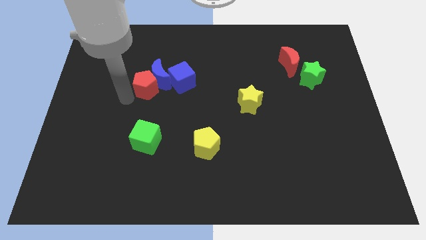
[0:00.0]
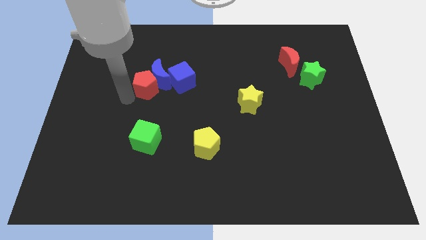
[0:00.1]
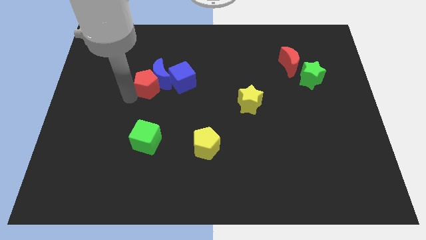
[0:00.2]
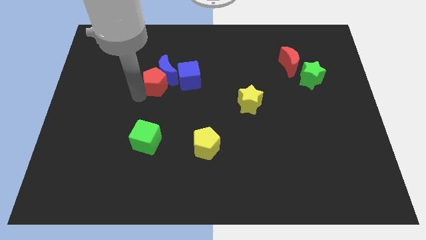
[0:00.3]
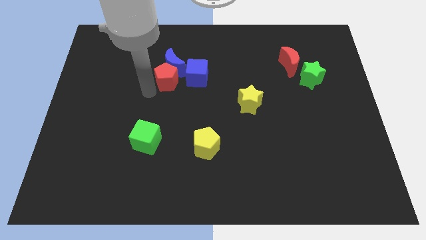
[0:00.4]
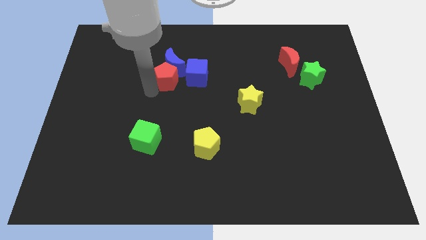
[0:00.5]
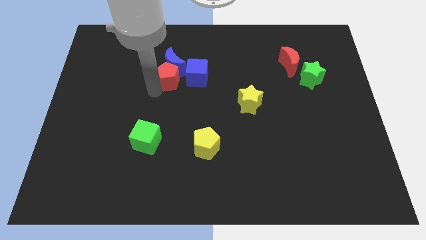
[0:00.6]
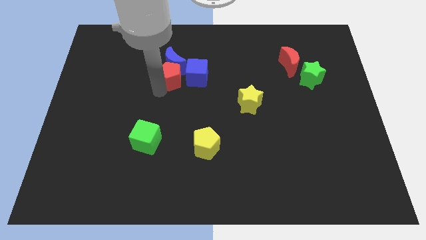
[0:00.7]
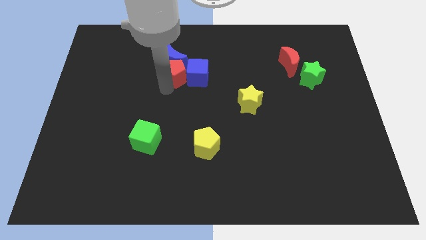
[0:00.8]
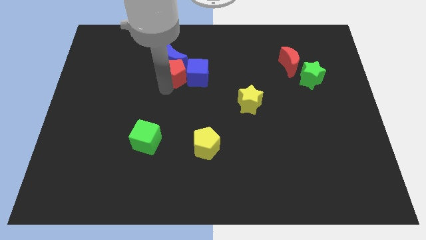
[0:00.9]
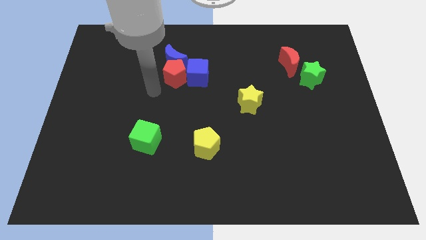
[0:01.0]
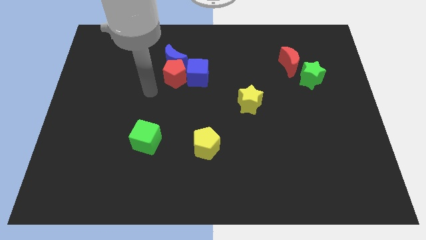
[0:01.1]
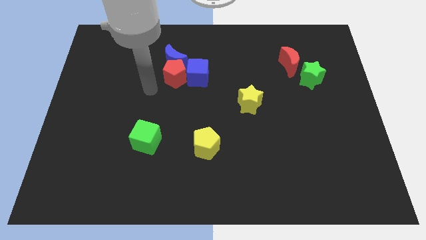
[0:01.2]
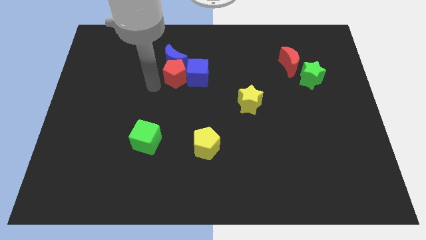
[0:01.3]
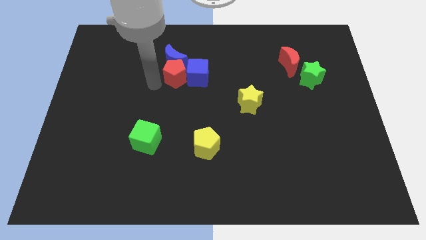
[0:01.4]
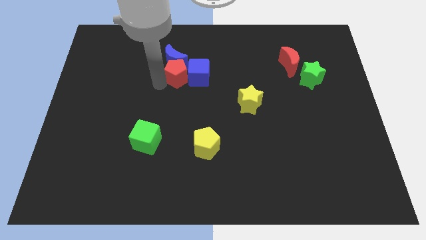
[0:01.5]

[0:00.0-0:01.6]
push the red pentagon to the left of the blue cube

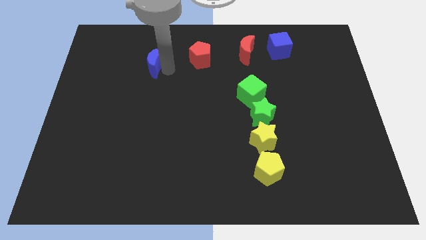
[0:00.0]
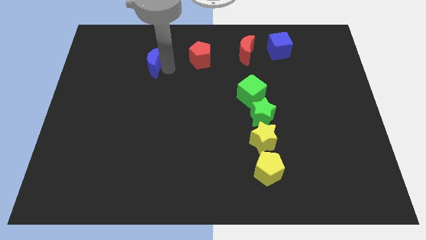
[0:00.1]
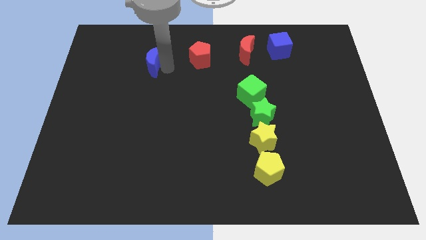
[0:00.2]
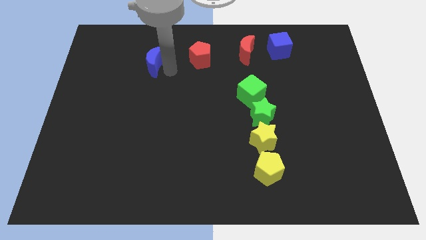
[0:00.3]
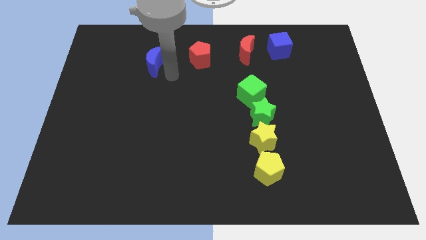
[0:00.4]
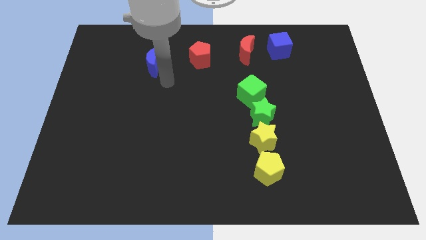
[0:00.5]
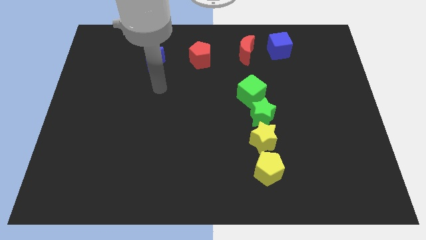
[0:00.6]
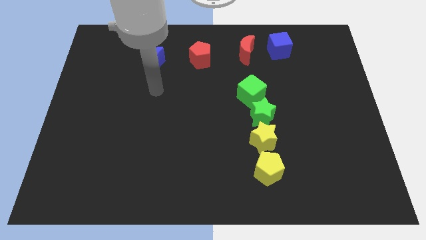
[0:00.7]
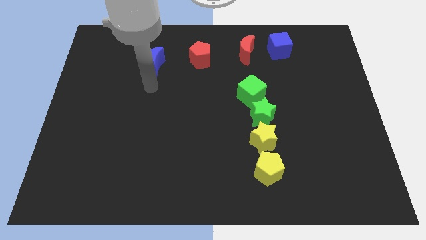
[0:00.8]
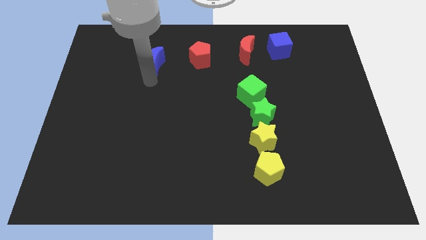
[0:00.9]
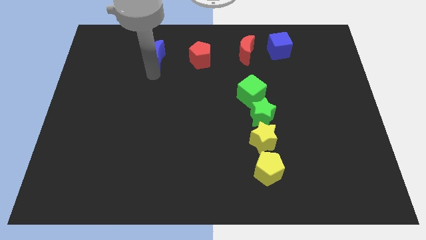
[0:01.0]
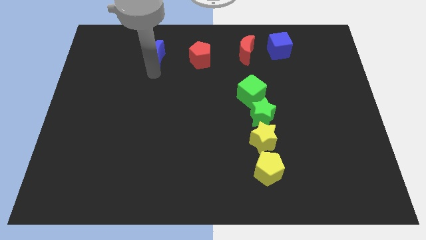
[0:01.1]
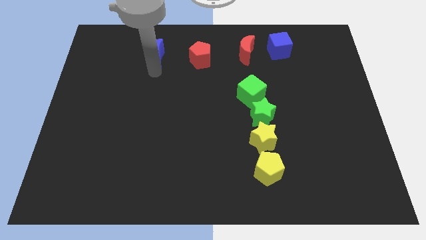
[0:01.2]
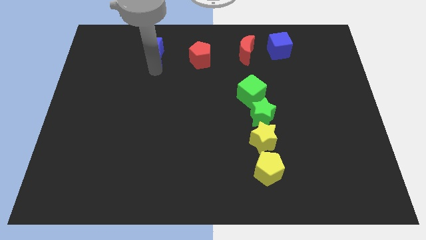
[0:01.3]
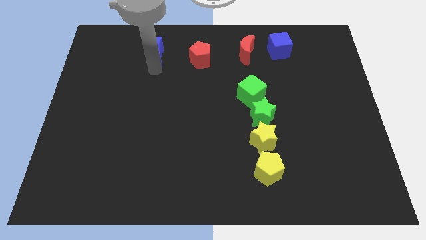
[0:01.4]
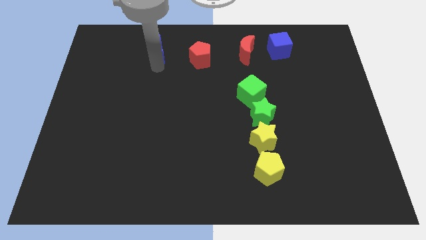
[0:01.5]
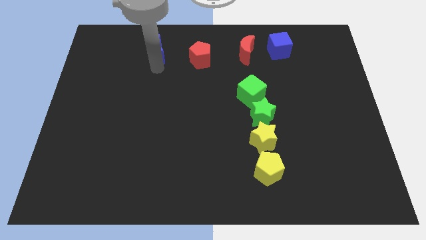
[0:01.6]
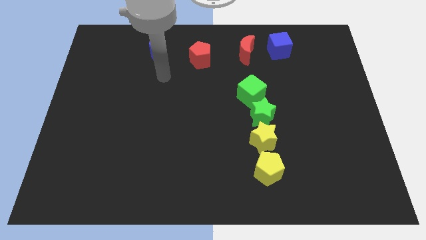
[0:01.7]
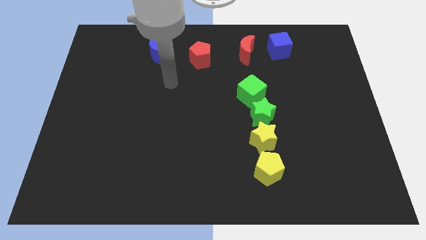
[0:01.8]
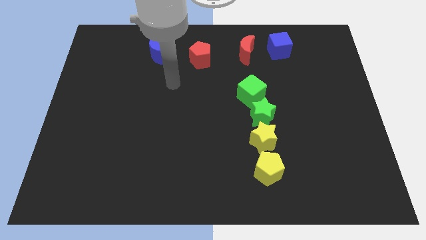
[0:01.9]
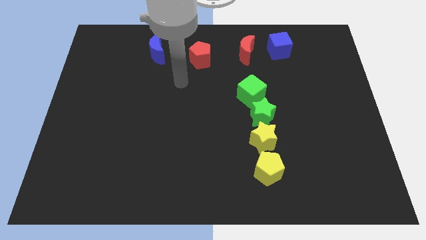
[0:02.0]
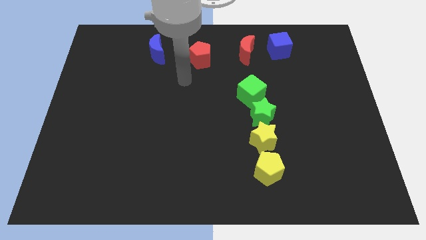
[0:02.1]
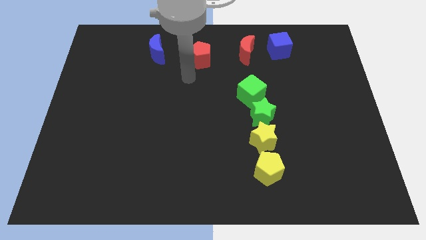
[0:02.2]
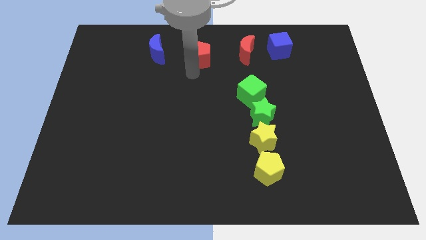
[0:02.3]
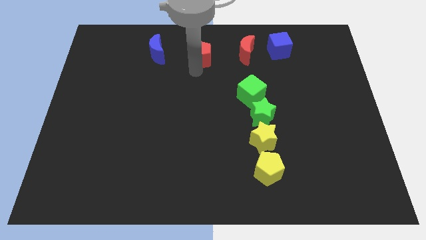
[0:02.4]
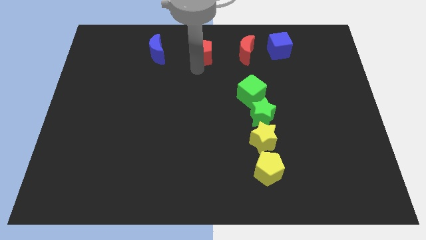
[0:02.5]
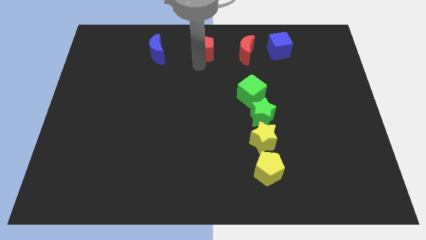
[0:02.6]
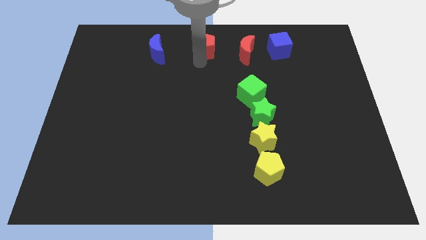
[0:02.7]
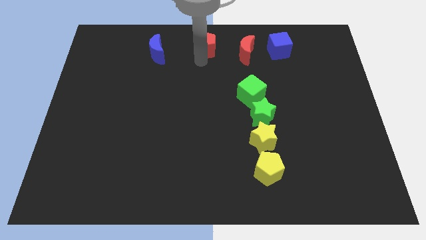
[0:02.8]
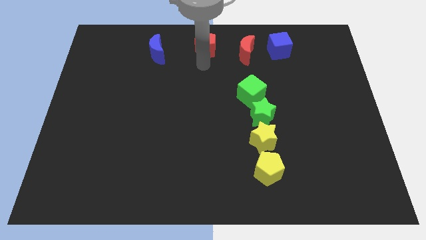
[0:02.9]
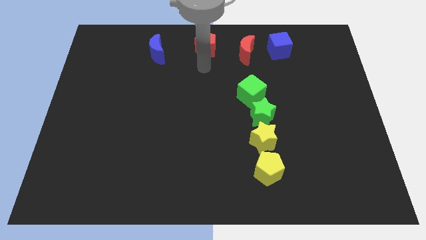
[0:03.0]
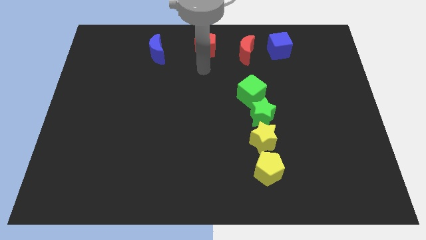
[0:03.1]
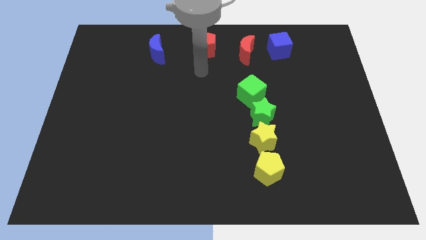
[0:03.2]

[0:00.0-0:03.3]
move the red blocks and blue blocks in a horizontal row

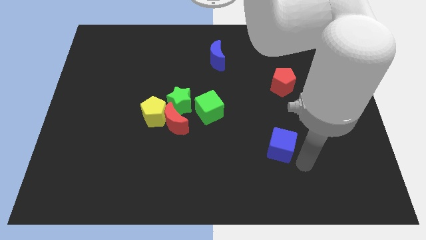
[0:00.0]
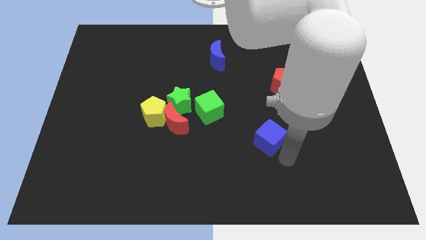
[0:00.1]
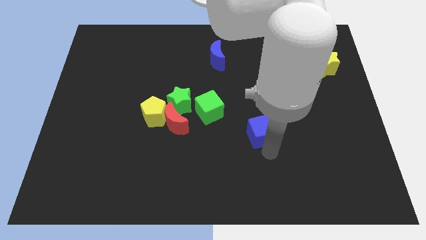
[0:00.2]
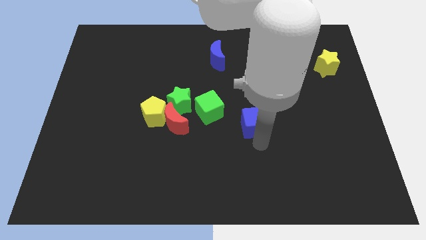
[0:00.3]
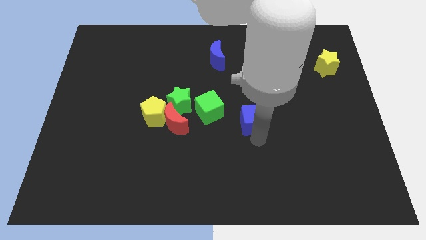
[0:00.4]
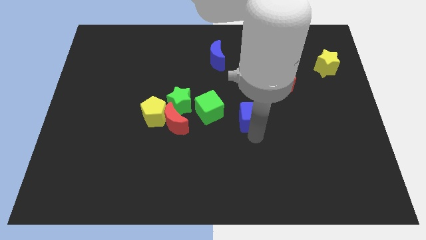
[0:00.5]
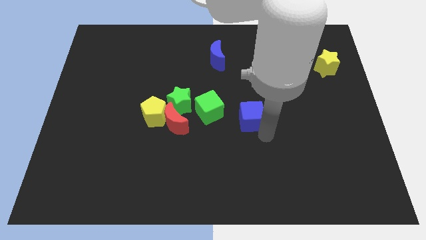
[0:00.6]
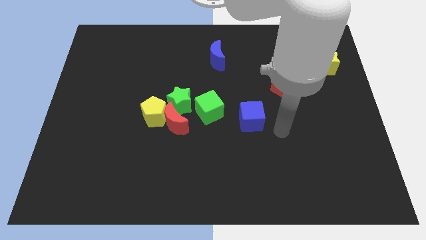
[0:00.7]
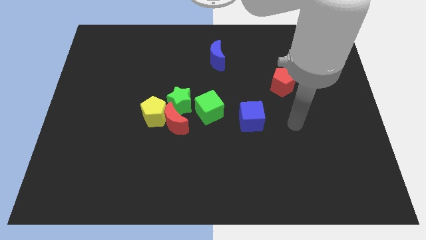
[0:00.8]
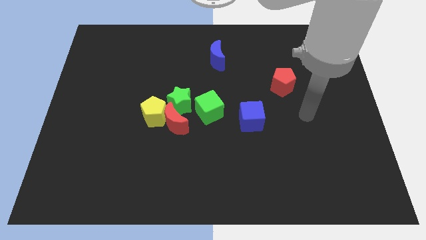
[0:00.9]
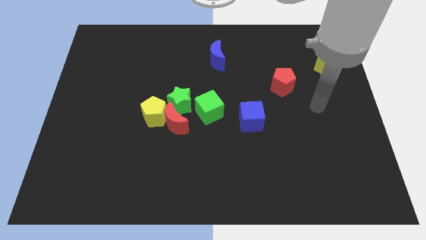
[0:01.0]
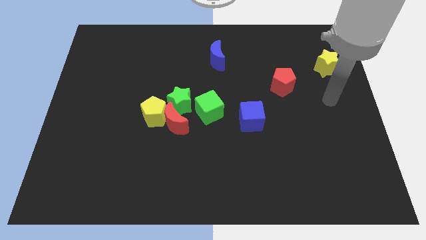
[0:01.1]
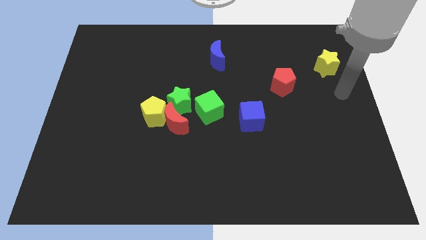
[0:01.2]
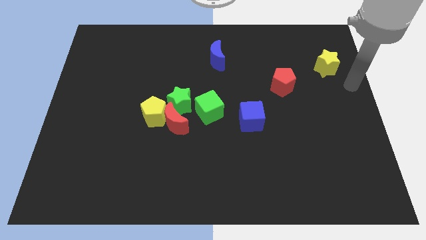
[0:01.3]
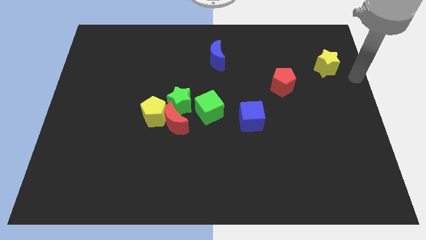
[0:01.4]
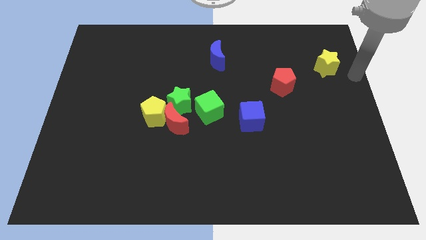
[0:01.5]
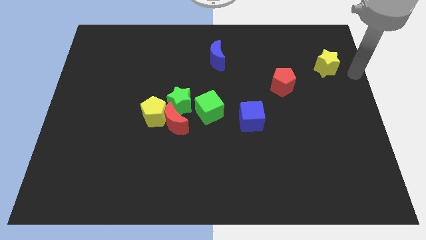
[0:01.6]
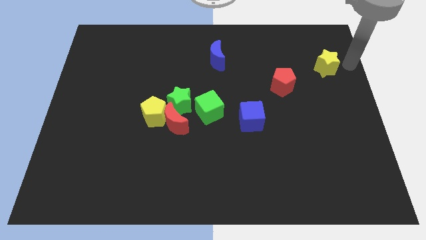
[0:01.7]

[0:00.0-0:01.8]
place the blue cube towards the bottom left side of the red pentagon

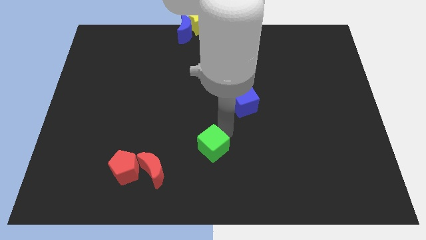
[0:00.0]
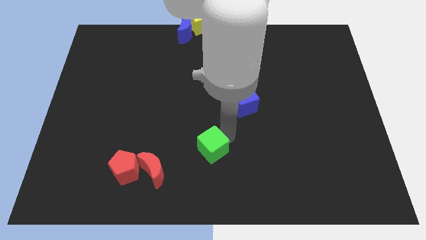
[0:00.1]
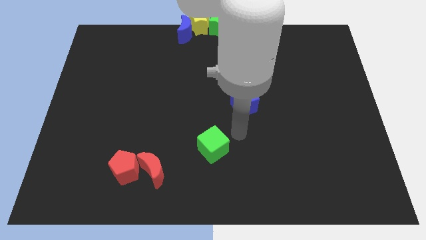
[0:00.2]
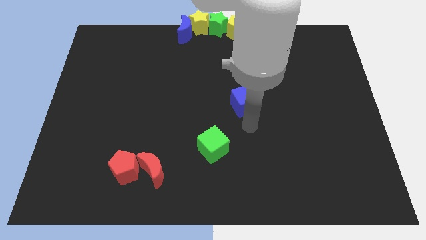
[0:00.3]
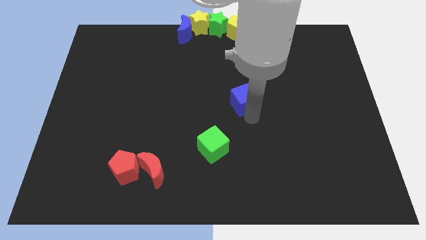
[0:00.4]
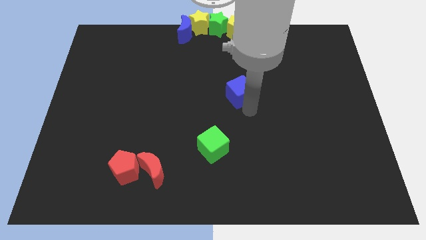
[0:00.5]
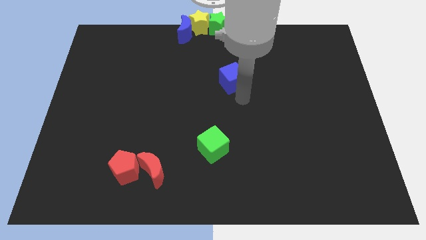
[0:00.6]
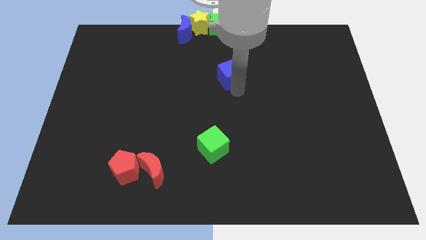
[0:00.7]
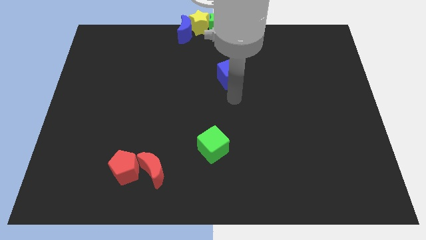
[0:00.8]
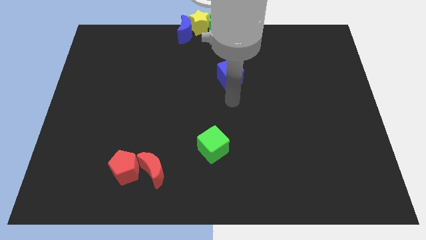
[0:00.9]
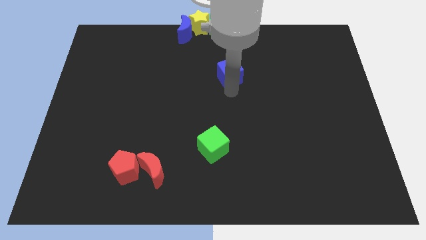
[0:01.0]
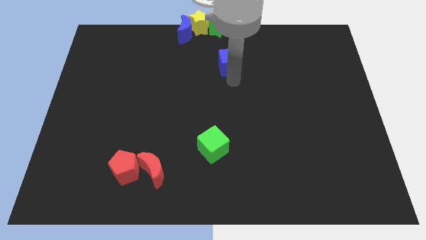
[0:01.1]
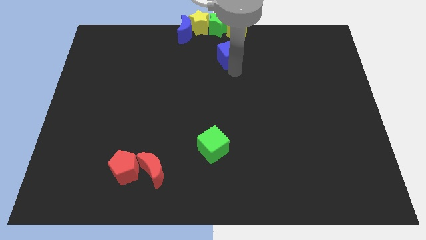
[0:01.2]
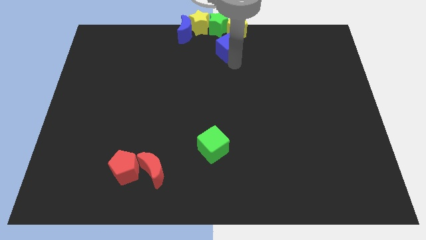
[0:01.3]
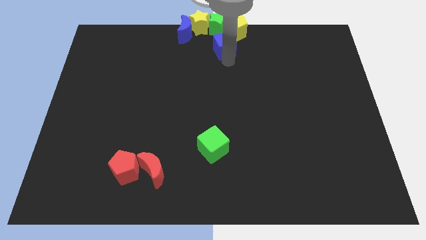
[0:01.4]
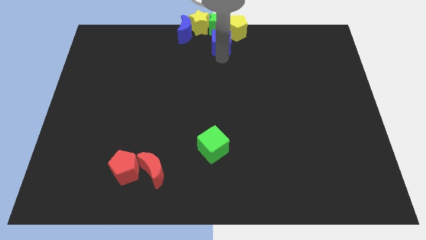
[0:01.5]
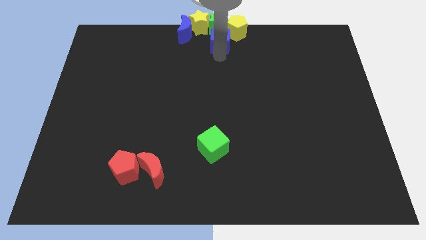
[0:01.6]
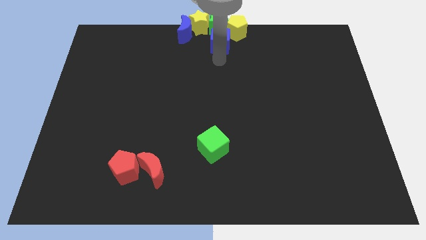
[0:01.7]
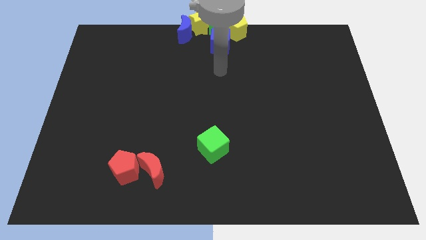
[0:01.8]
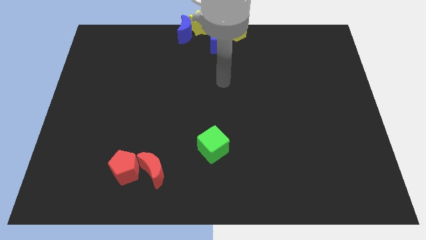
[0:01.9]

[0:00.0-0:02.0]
move the blue cube below the green star

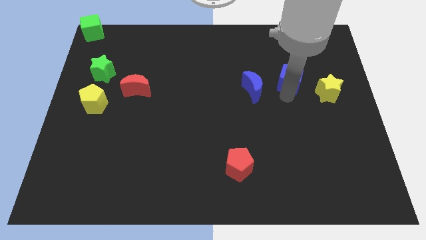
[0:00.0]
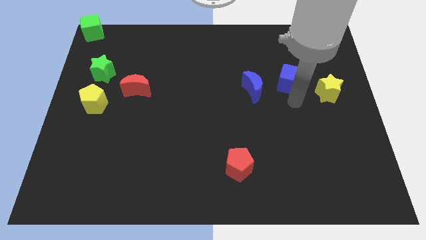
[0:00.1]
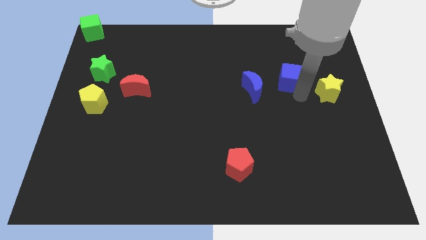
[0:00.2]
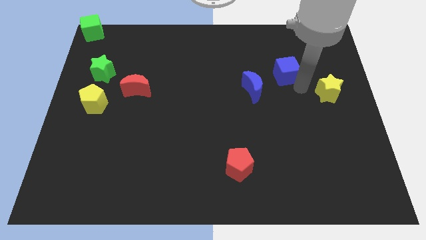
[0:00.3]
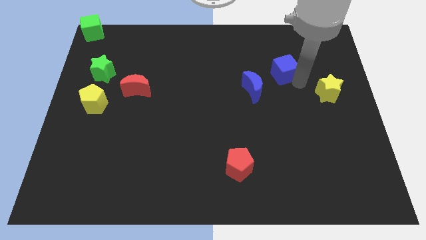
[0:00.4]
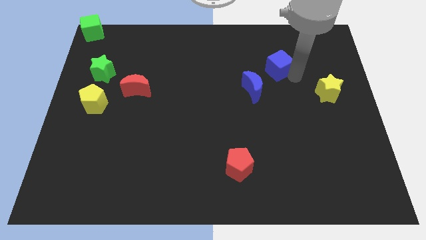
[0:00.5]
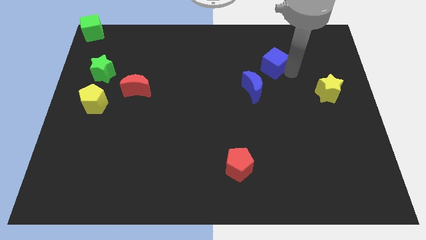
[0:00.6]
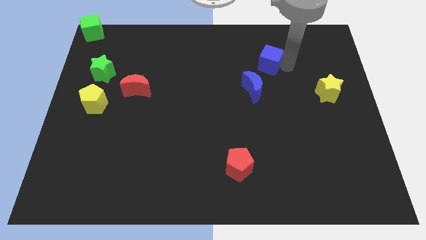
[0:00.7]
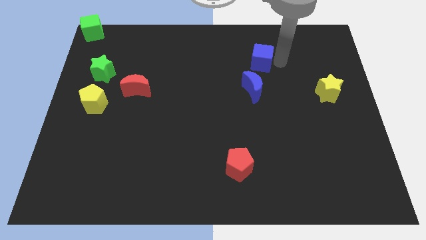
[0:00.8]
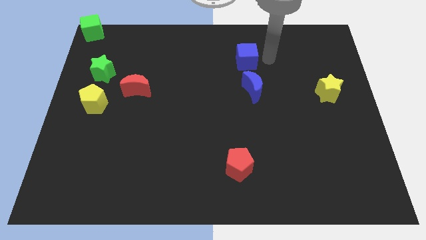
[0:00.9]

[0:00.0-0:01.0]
place the blue cube above the blue crescent
